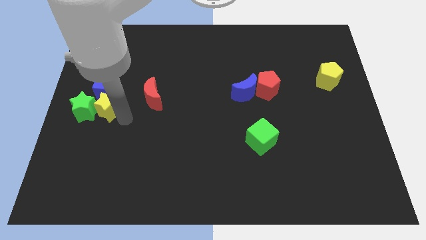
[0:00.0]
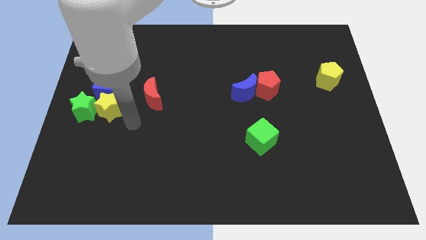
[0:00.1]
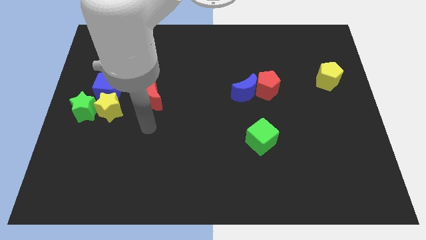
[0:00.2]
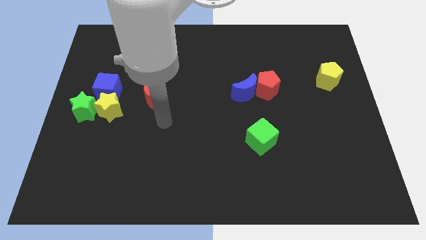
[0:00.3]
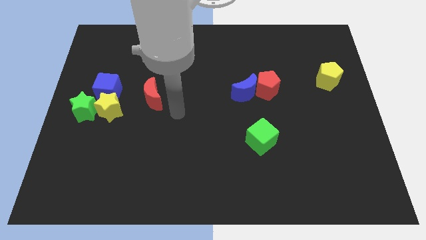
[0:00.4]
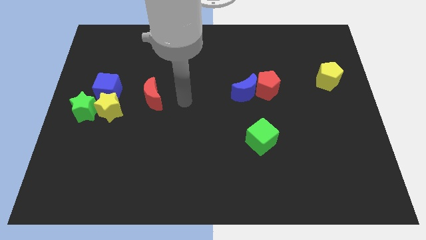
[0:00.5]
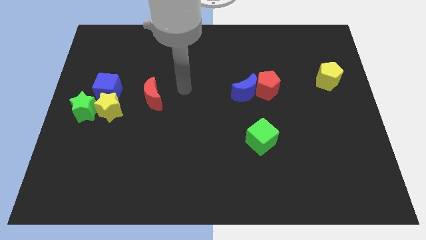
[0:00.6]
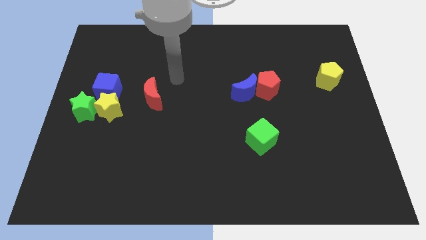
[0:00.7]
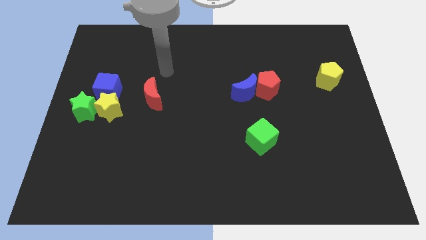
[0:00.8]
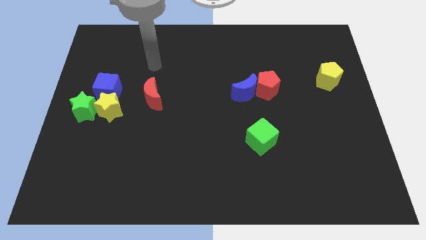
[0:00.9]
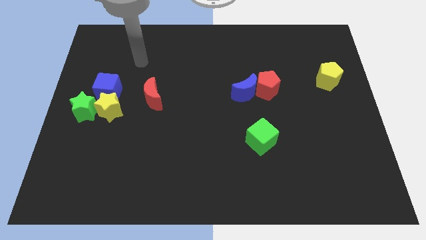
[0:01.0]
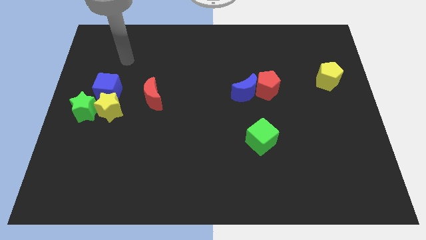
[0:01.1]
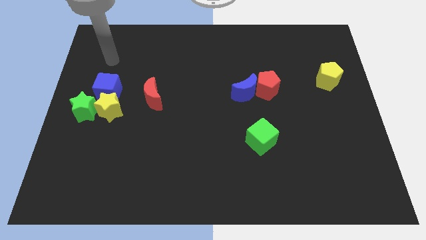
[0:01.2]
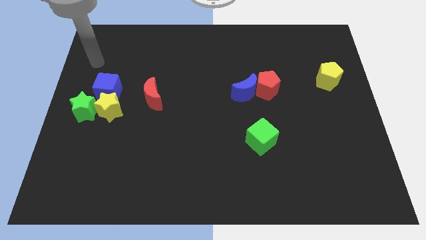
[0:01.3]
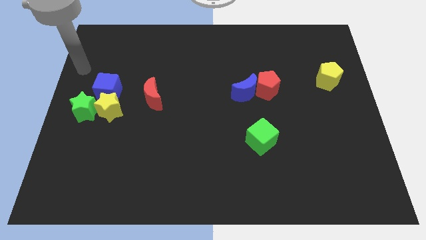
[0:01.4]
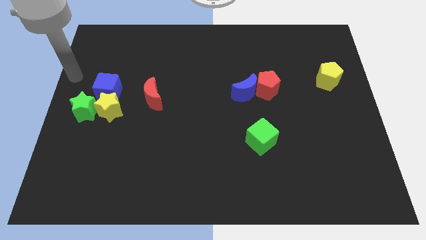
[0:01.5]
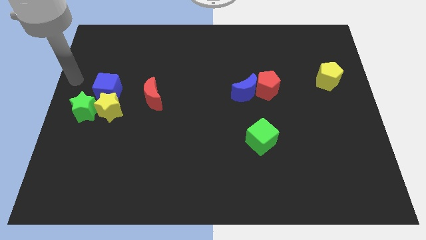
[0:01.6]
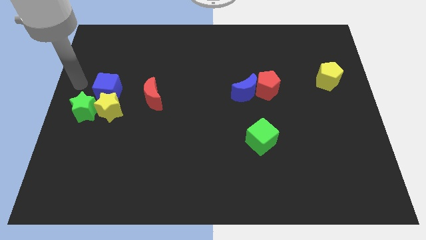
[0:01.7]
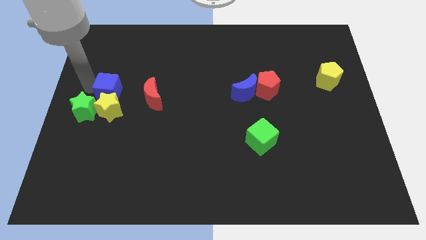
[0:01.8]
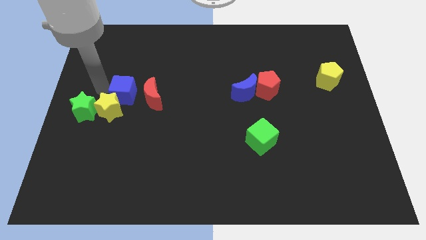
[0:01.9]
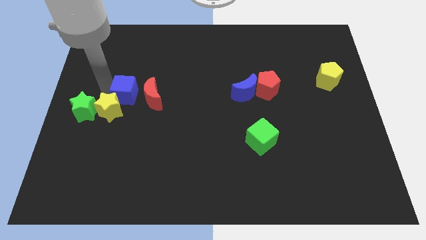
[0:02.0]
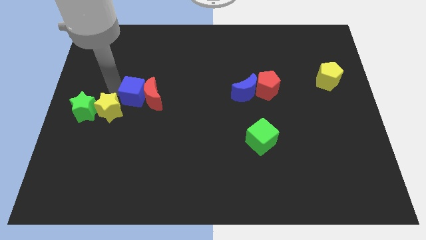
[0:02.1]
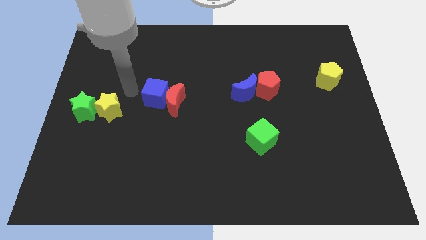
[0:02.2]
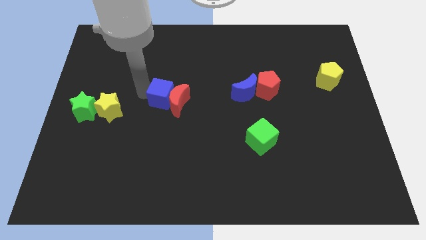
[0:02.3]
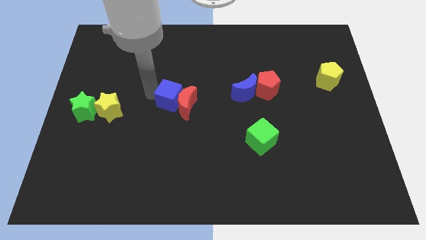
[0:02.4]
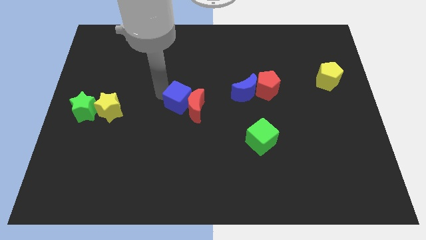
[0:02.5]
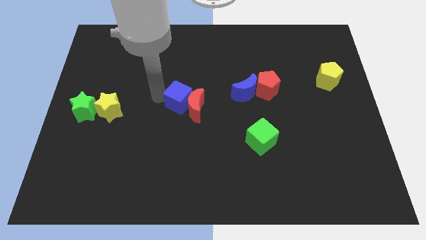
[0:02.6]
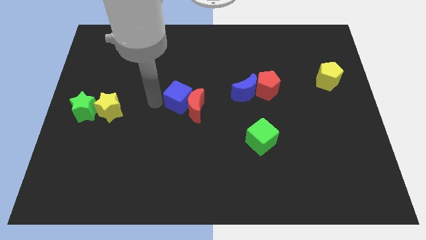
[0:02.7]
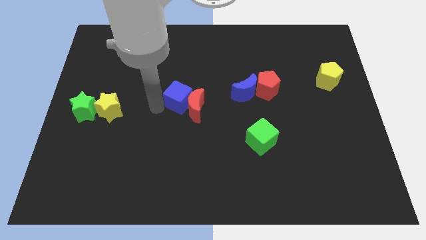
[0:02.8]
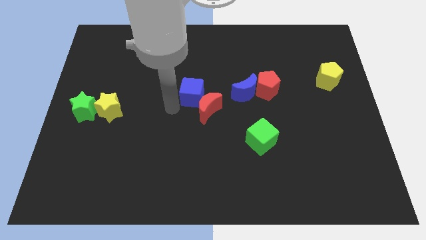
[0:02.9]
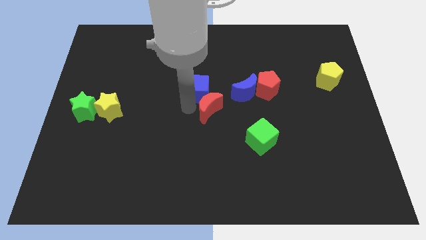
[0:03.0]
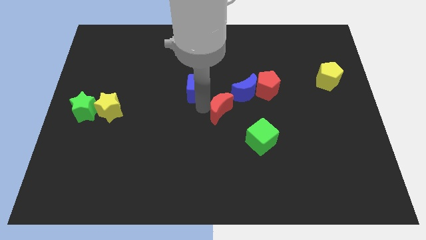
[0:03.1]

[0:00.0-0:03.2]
push the blue cube into the red crescent

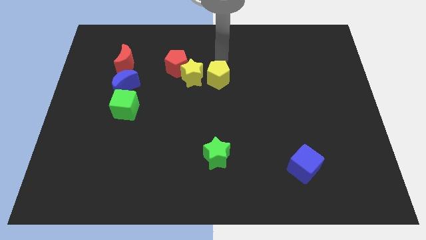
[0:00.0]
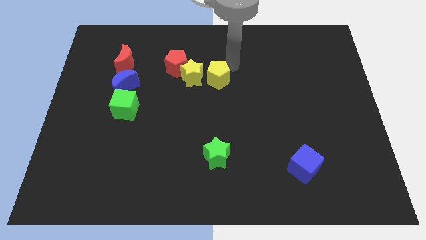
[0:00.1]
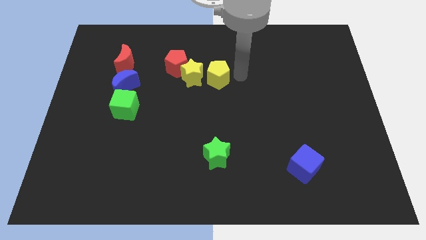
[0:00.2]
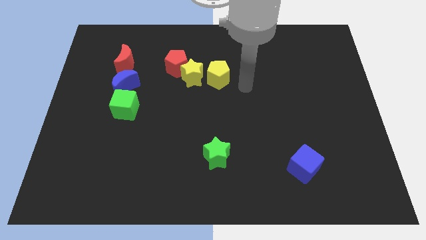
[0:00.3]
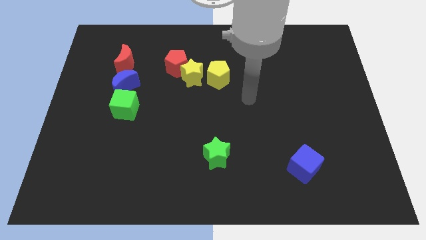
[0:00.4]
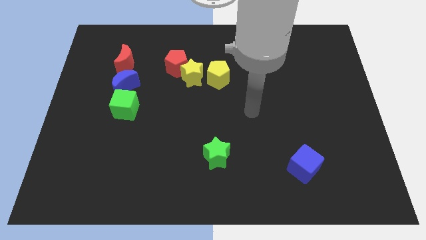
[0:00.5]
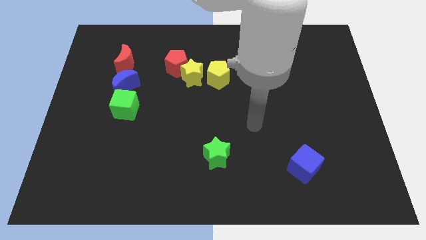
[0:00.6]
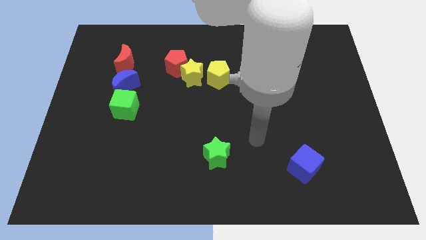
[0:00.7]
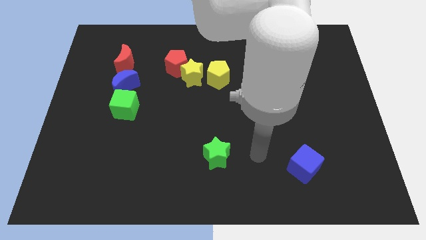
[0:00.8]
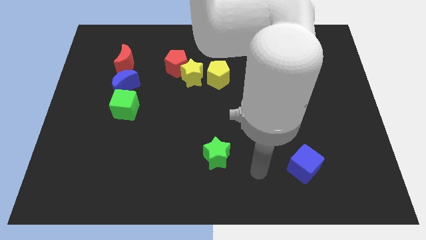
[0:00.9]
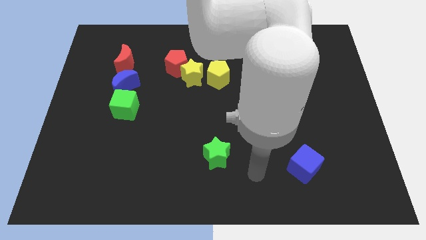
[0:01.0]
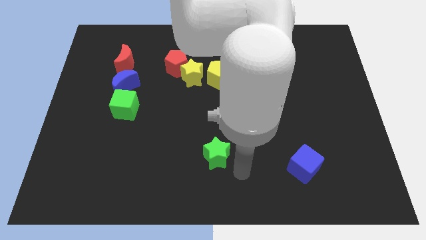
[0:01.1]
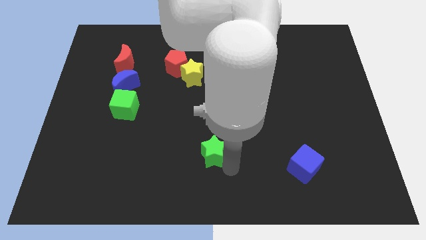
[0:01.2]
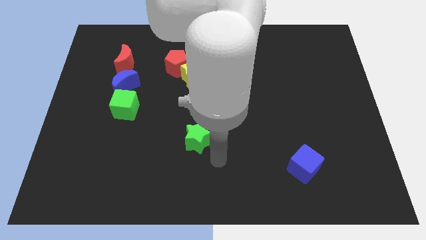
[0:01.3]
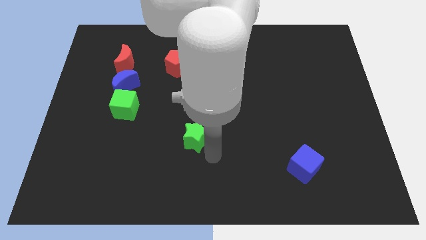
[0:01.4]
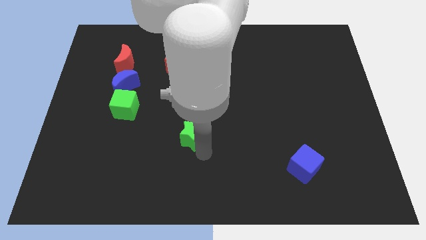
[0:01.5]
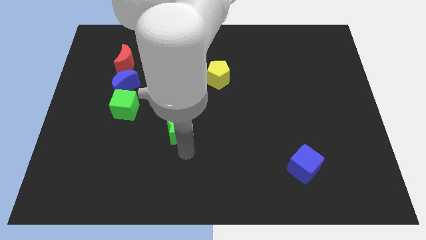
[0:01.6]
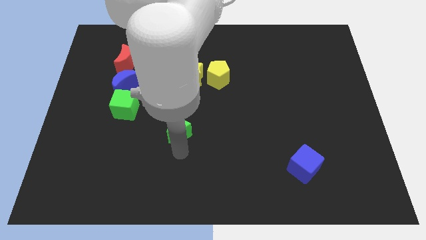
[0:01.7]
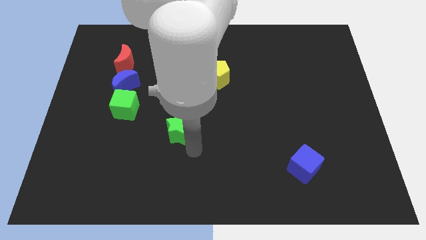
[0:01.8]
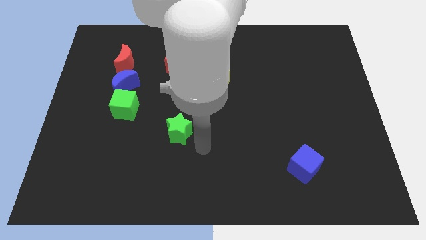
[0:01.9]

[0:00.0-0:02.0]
push green star to the center of the board

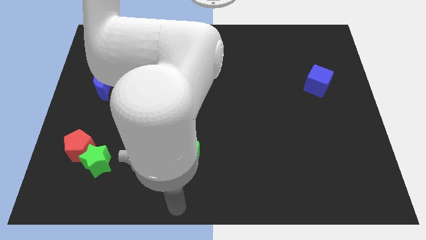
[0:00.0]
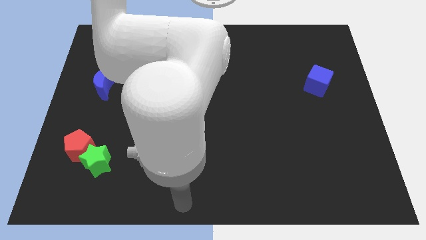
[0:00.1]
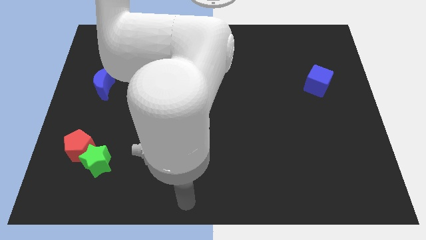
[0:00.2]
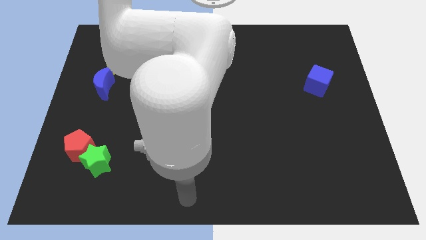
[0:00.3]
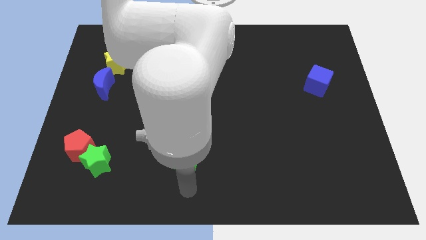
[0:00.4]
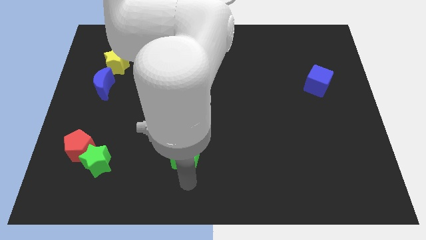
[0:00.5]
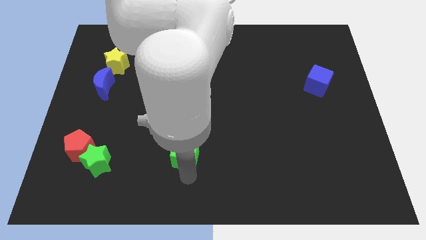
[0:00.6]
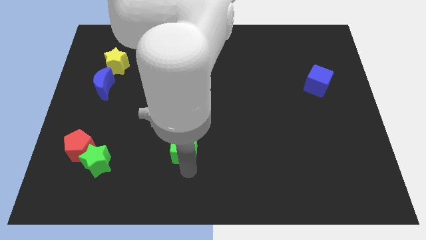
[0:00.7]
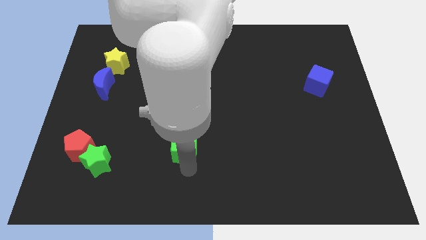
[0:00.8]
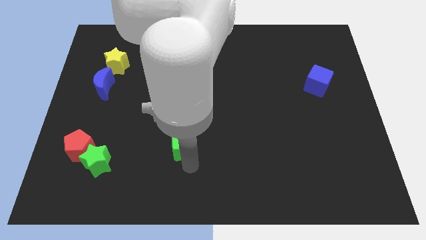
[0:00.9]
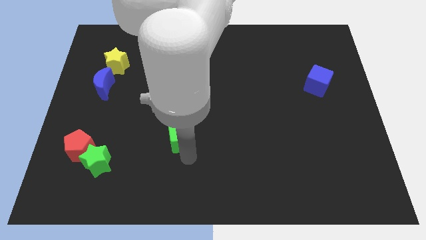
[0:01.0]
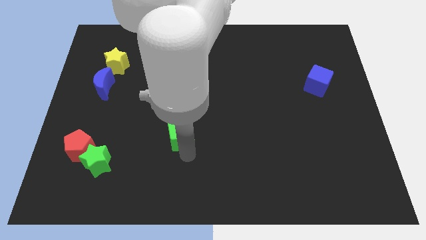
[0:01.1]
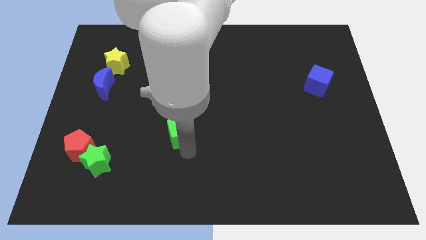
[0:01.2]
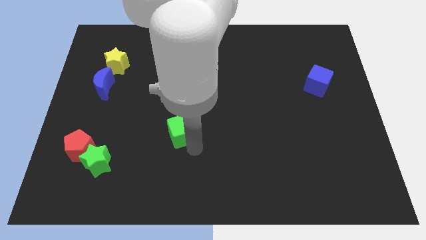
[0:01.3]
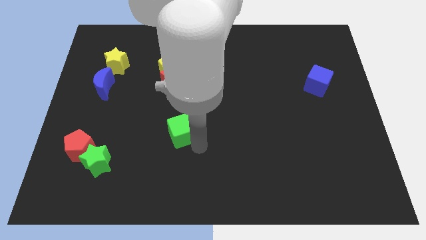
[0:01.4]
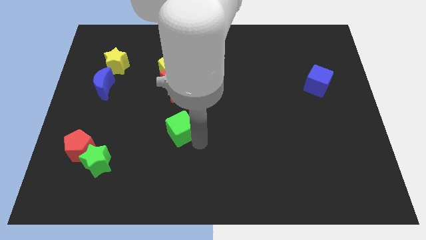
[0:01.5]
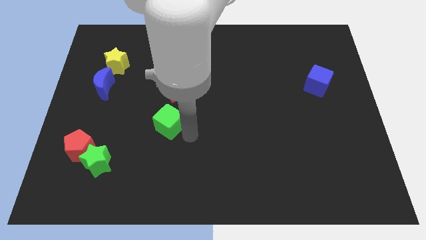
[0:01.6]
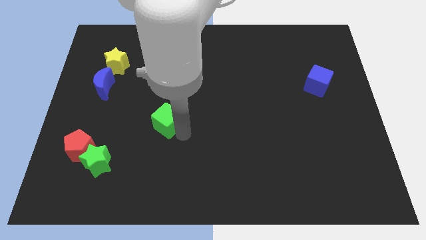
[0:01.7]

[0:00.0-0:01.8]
move the green cube close to the bottom of the red moon

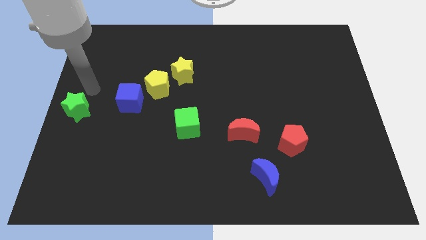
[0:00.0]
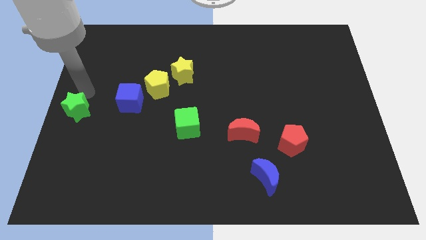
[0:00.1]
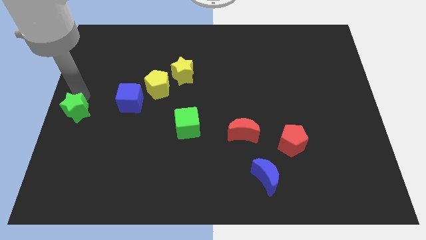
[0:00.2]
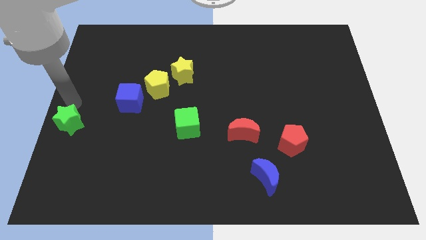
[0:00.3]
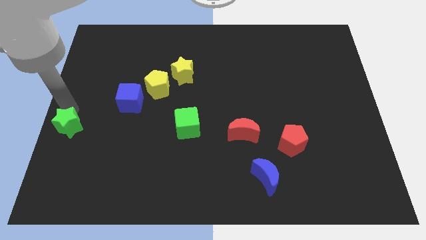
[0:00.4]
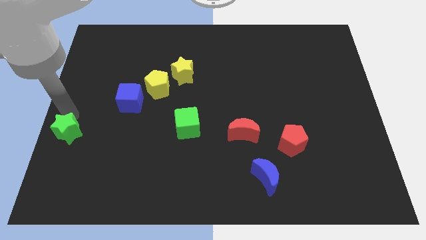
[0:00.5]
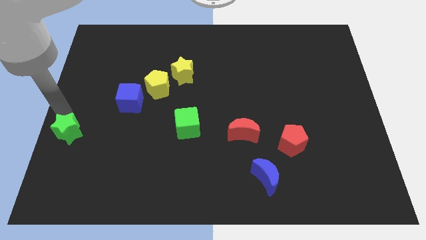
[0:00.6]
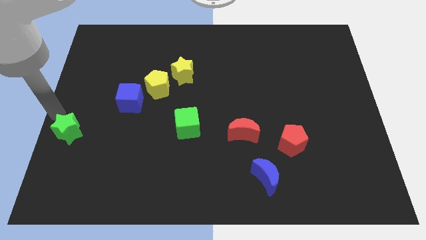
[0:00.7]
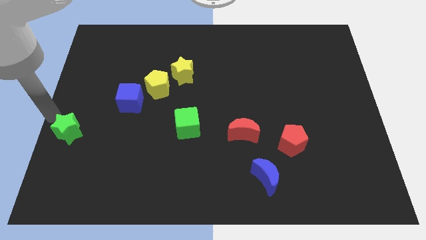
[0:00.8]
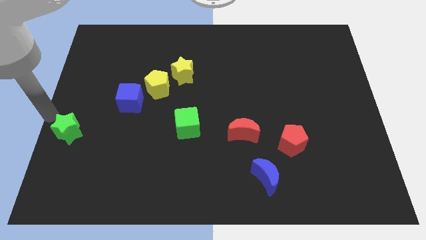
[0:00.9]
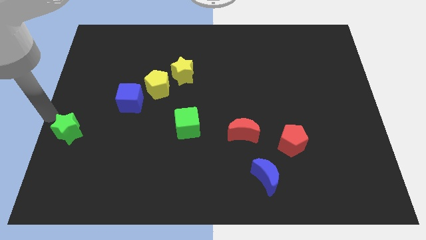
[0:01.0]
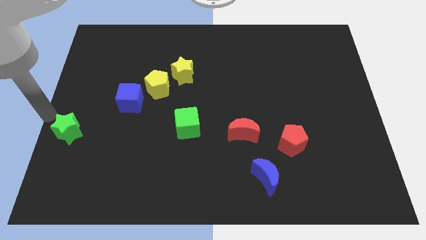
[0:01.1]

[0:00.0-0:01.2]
slightly move the green star towards bottom horizontally left to the green cube

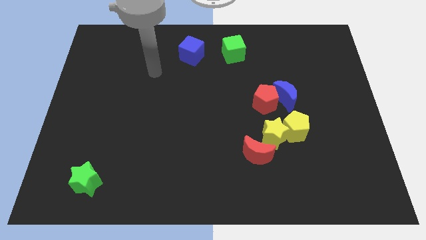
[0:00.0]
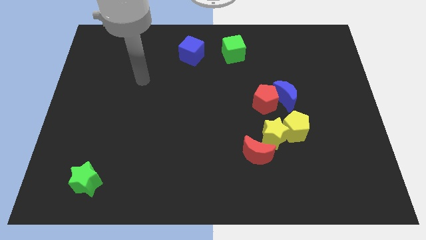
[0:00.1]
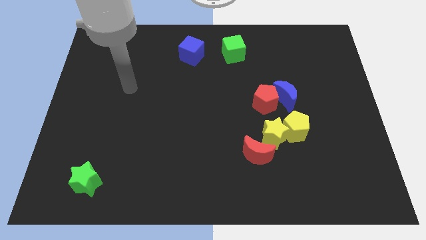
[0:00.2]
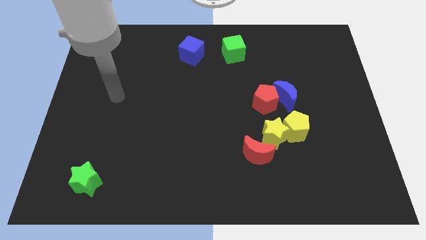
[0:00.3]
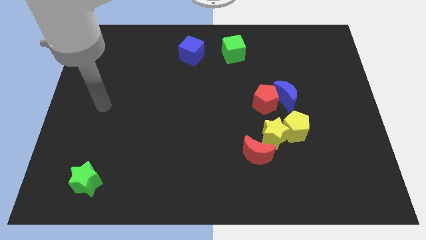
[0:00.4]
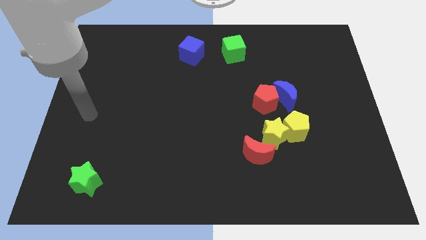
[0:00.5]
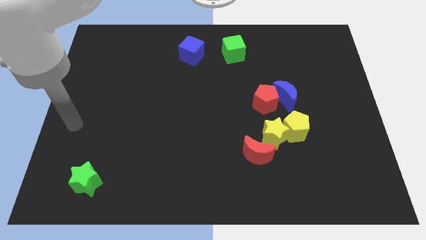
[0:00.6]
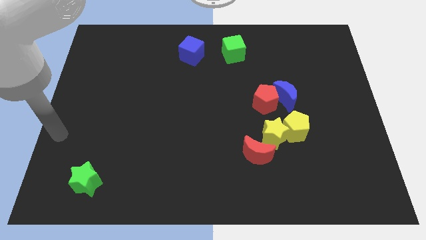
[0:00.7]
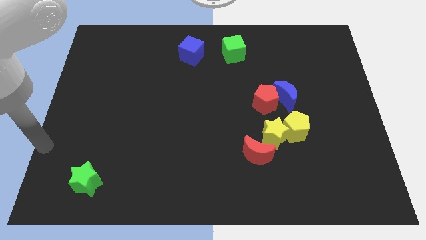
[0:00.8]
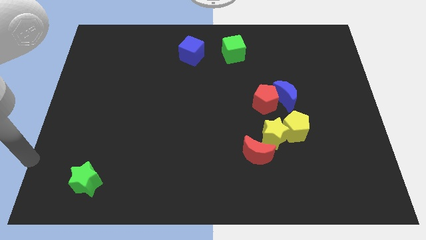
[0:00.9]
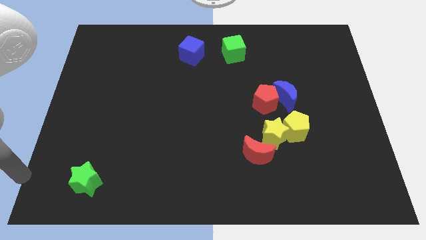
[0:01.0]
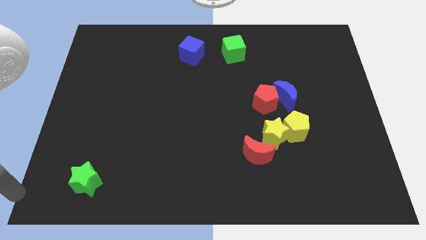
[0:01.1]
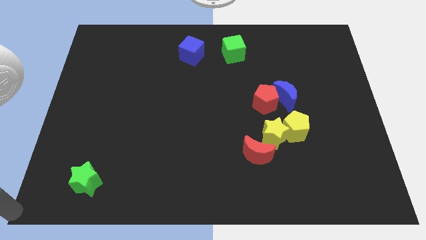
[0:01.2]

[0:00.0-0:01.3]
point your arm at the bottom left corner of the board
